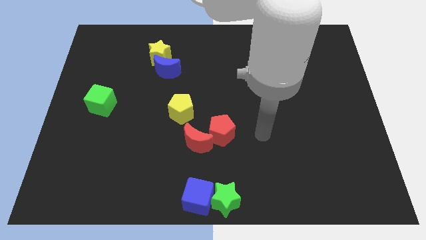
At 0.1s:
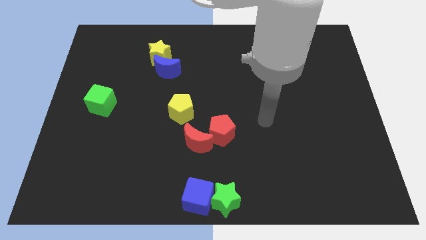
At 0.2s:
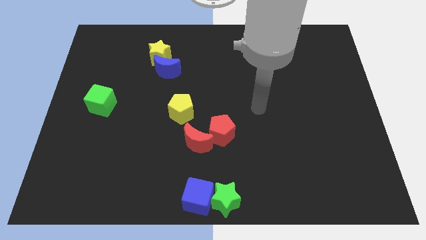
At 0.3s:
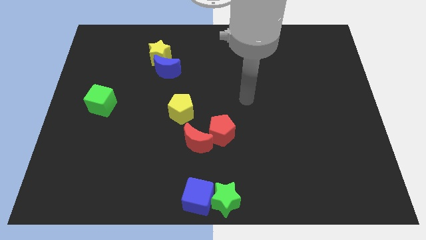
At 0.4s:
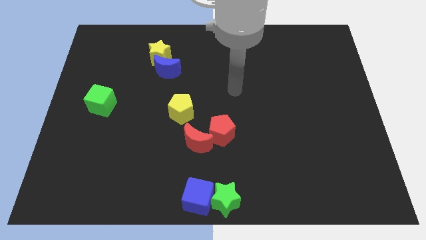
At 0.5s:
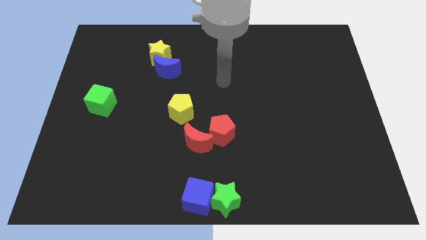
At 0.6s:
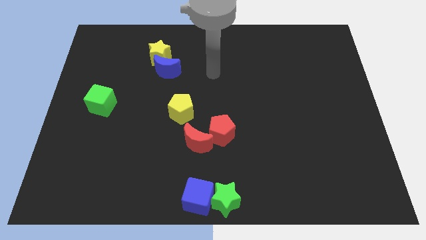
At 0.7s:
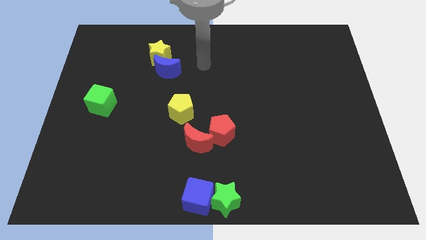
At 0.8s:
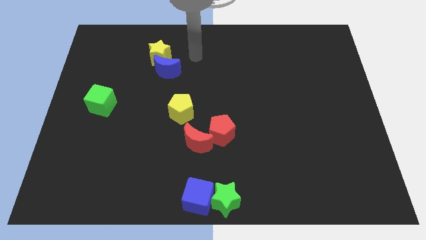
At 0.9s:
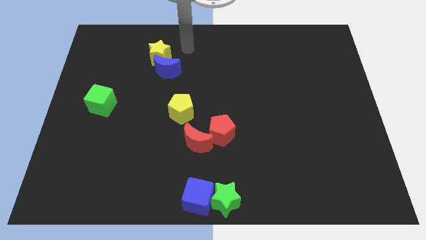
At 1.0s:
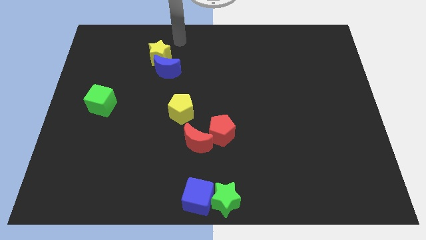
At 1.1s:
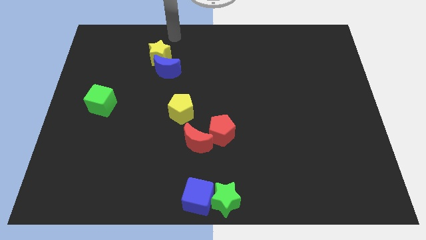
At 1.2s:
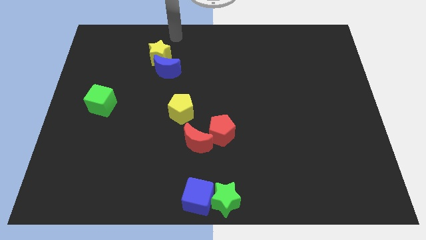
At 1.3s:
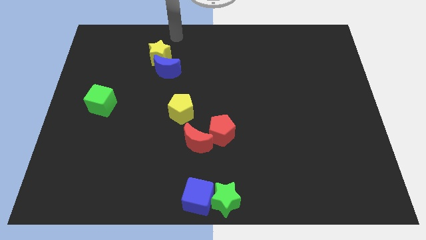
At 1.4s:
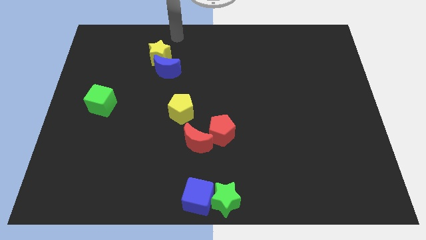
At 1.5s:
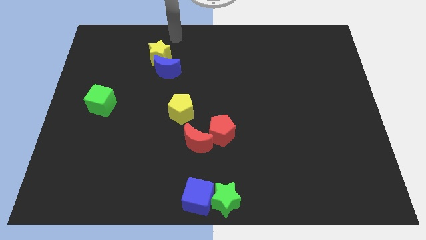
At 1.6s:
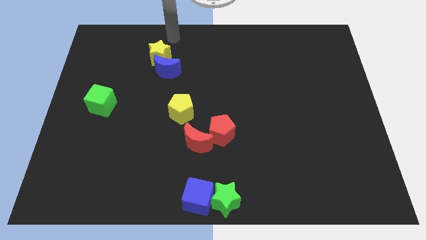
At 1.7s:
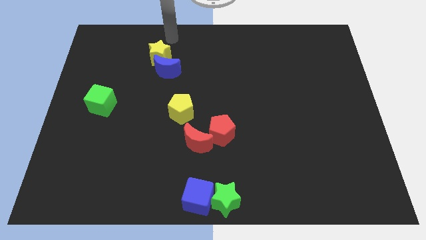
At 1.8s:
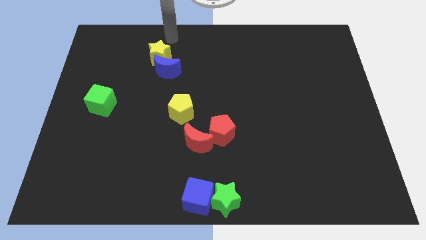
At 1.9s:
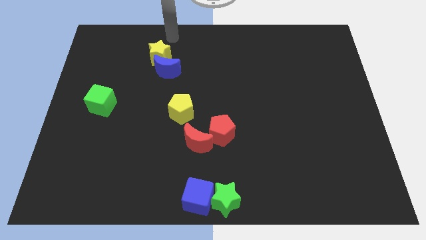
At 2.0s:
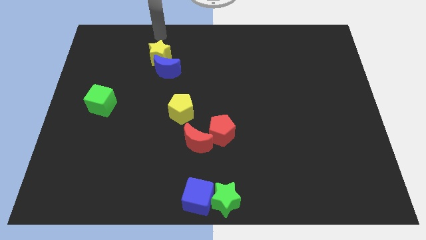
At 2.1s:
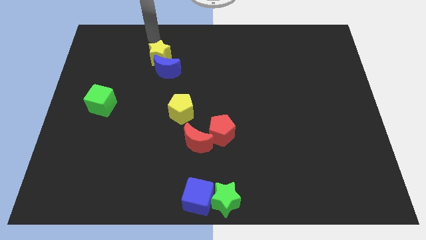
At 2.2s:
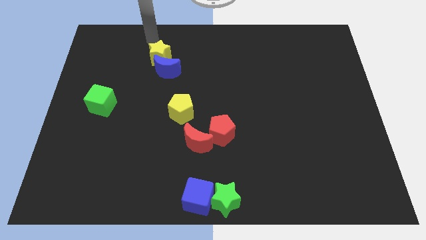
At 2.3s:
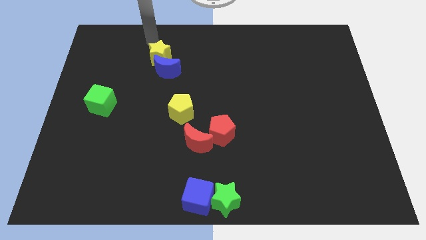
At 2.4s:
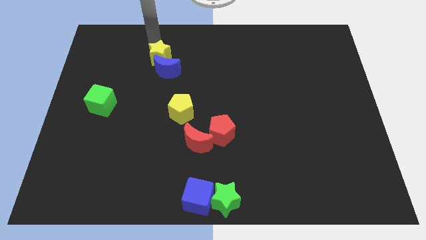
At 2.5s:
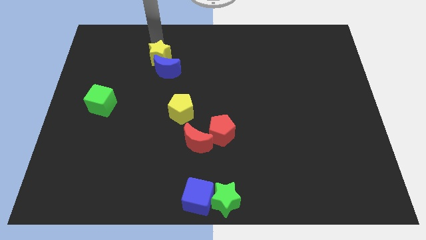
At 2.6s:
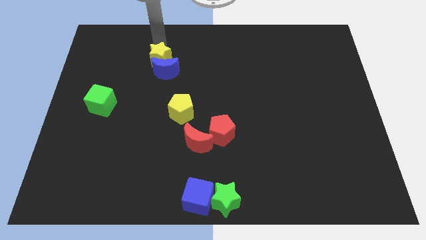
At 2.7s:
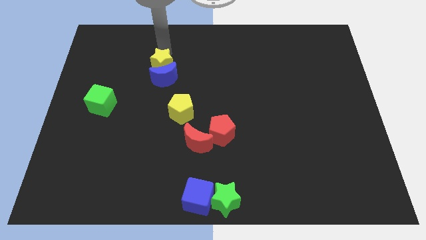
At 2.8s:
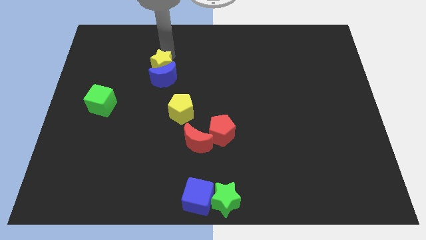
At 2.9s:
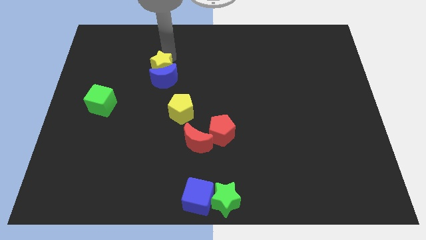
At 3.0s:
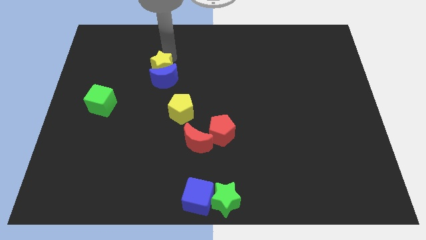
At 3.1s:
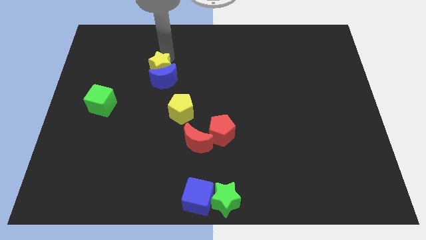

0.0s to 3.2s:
move the yellow star towards the blue crescent

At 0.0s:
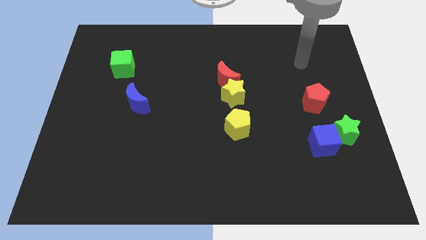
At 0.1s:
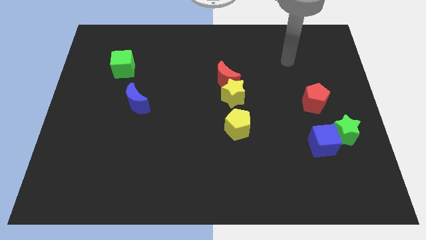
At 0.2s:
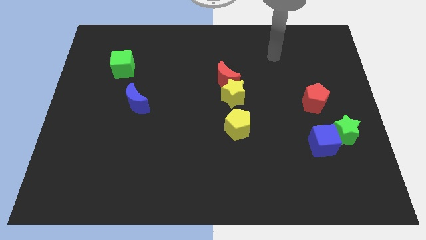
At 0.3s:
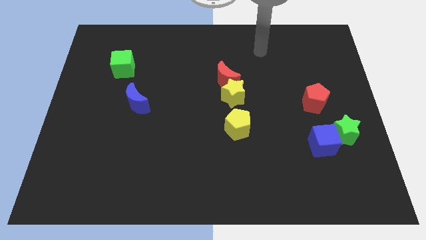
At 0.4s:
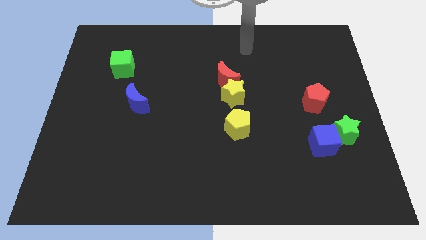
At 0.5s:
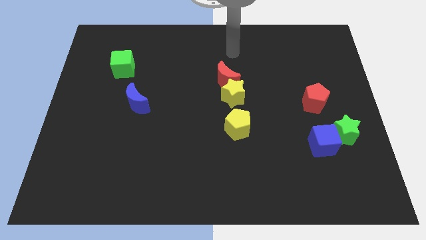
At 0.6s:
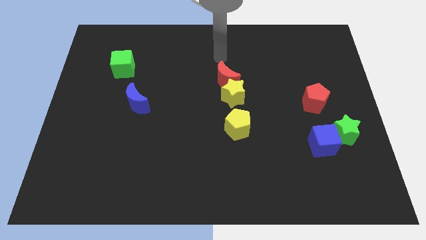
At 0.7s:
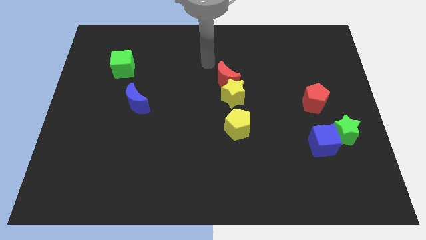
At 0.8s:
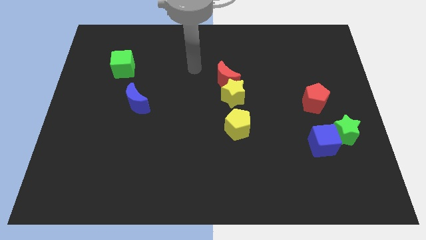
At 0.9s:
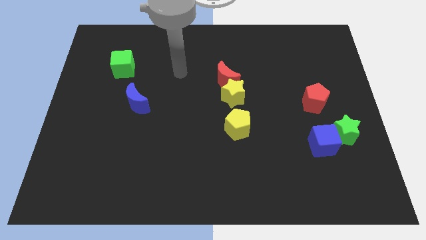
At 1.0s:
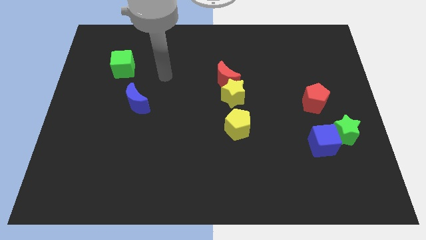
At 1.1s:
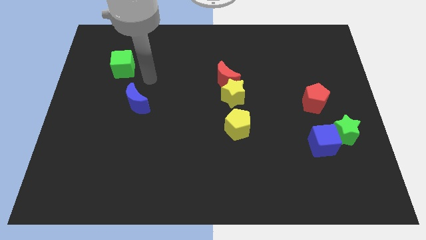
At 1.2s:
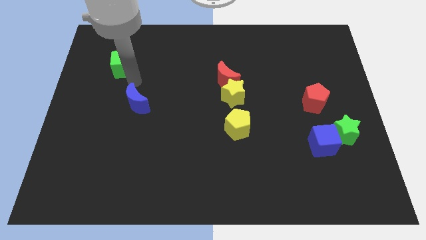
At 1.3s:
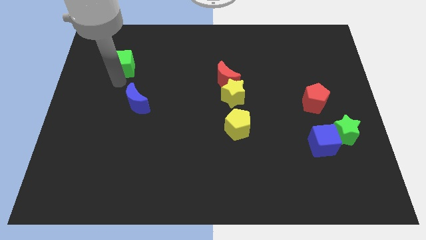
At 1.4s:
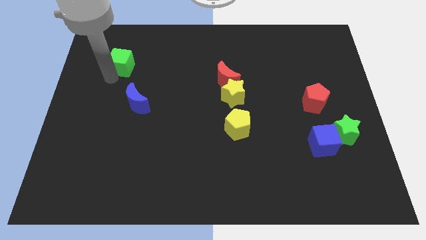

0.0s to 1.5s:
tap the green cube

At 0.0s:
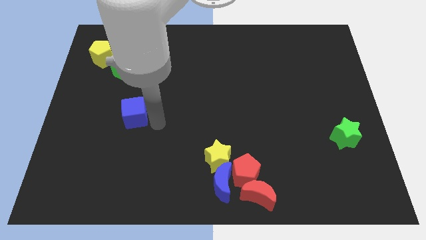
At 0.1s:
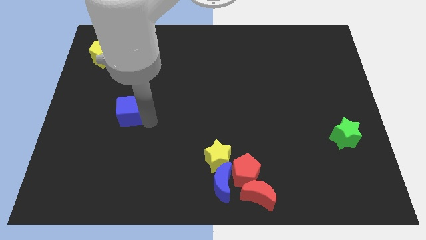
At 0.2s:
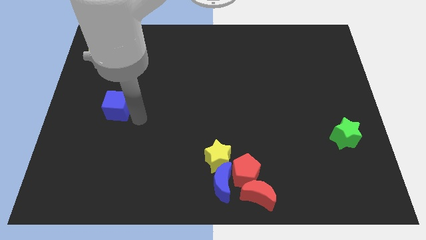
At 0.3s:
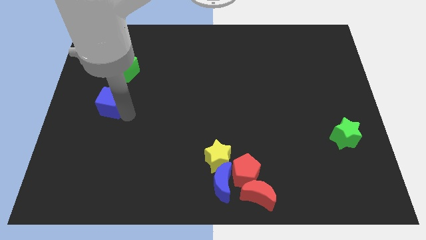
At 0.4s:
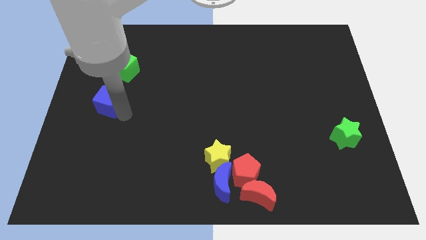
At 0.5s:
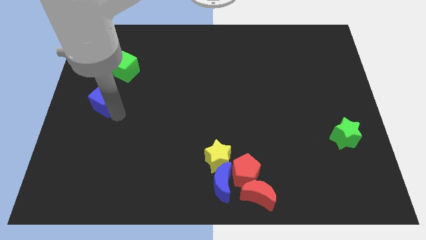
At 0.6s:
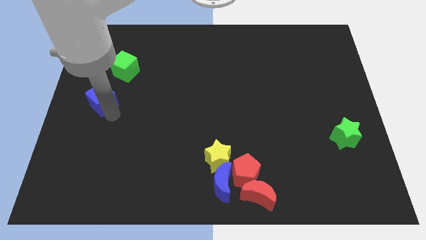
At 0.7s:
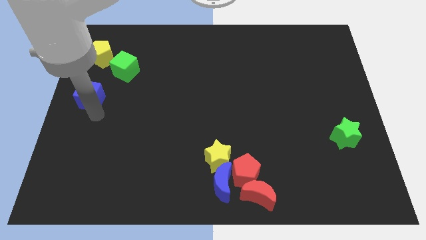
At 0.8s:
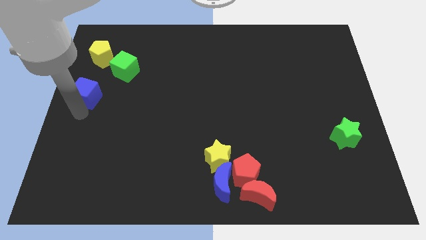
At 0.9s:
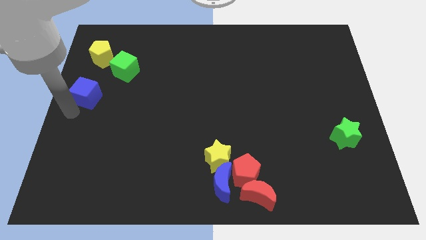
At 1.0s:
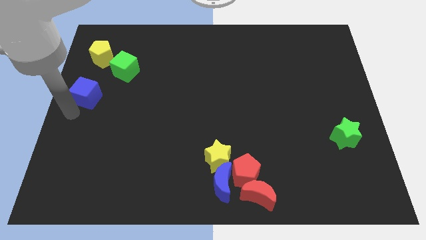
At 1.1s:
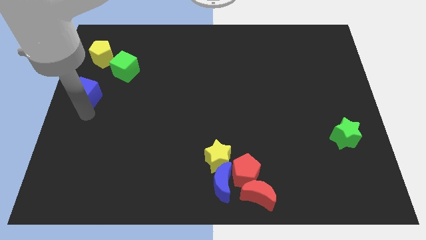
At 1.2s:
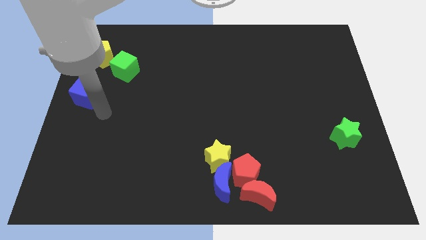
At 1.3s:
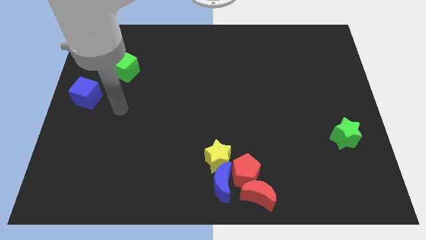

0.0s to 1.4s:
move the blue cube to the bottom of the yellow pentagon

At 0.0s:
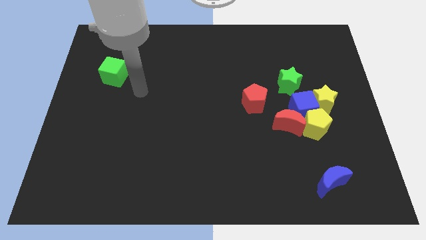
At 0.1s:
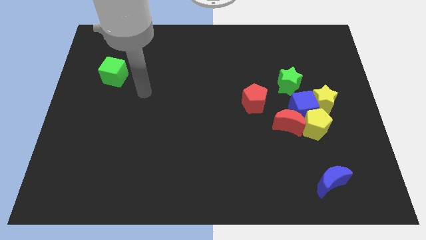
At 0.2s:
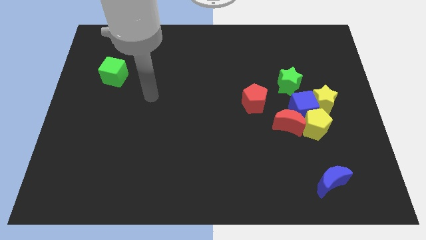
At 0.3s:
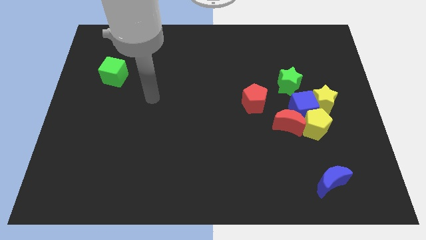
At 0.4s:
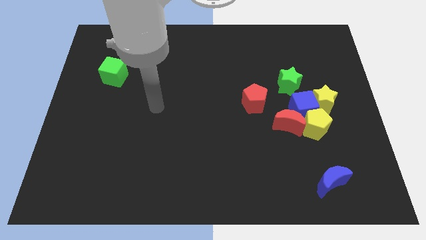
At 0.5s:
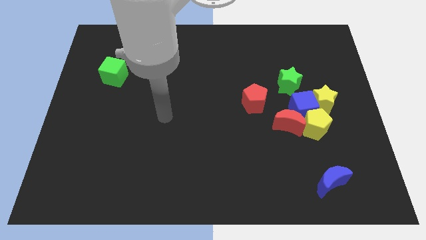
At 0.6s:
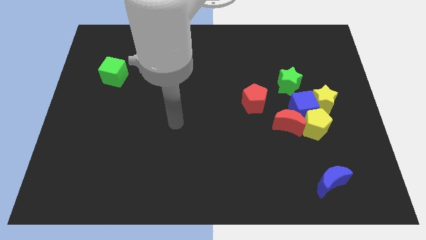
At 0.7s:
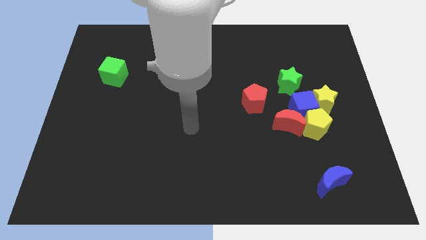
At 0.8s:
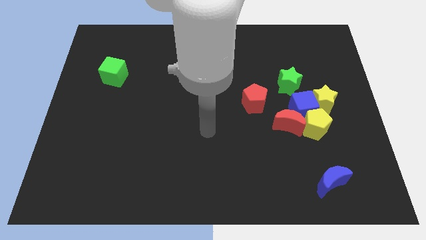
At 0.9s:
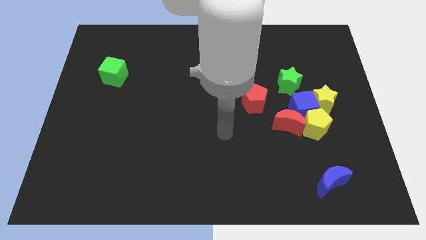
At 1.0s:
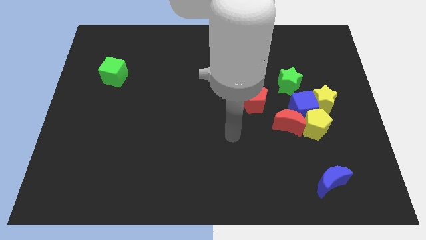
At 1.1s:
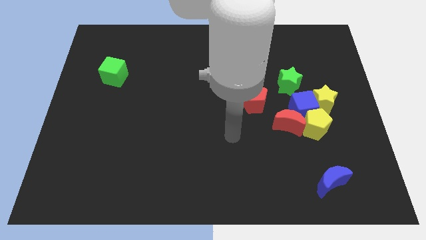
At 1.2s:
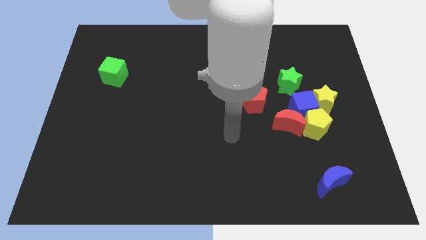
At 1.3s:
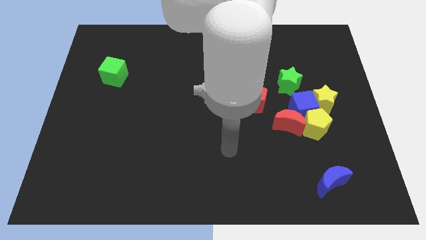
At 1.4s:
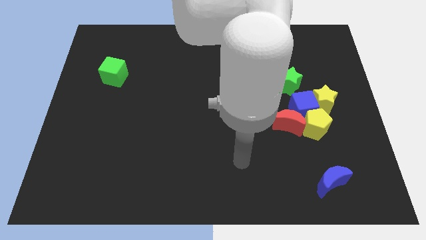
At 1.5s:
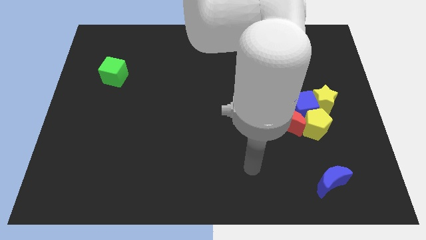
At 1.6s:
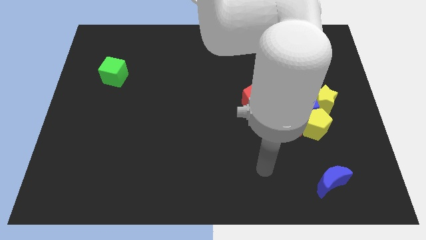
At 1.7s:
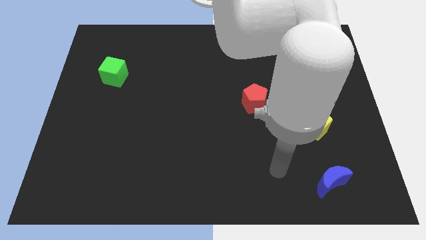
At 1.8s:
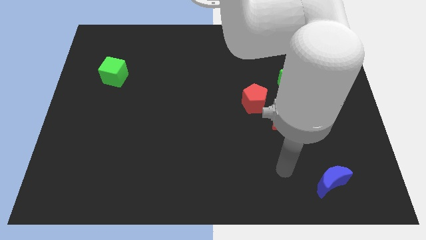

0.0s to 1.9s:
move your arm towards the blue crescent

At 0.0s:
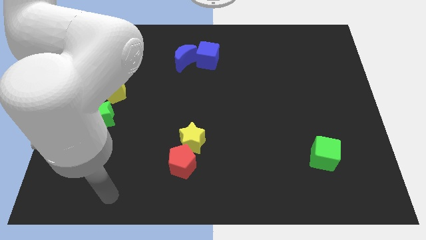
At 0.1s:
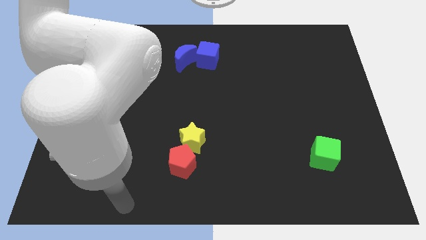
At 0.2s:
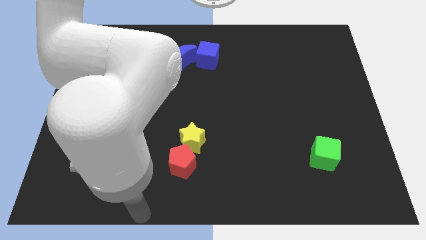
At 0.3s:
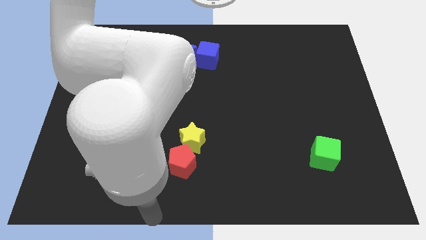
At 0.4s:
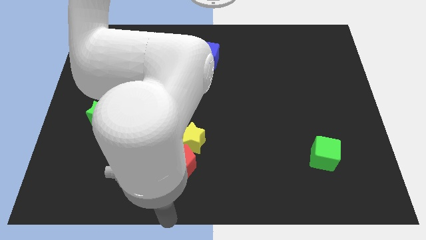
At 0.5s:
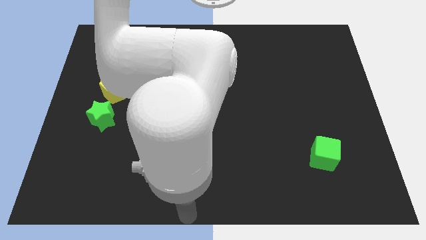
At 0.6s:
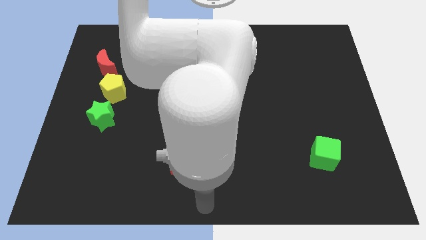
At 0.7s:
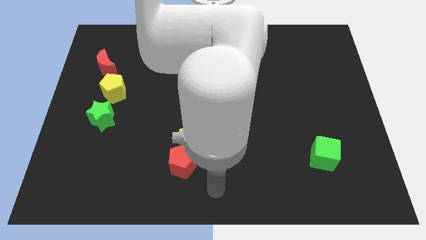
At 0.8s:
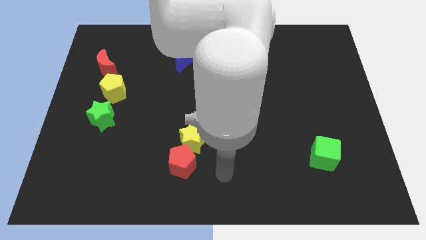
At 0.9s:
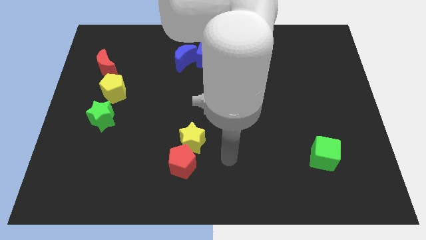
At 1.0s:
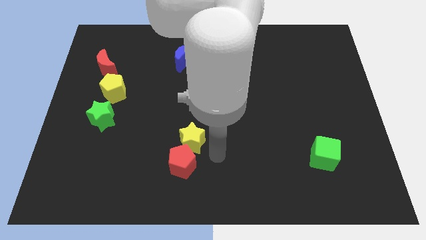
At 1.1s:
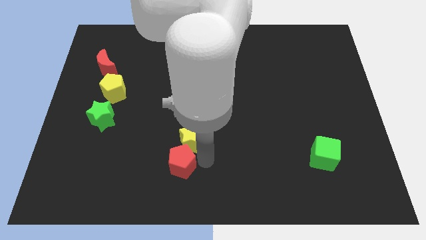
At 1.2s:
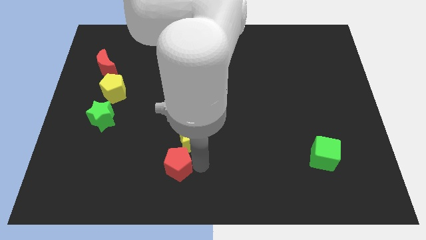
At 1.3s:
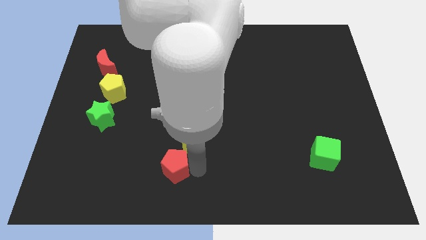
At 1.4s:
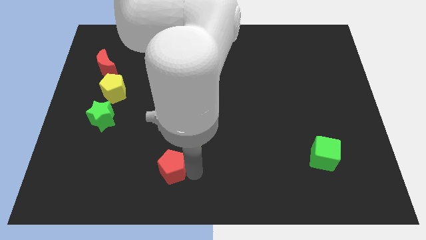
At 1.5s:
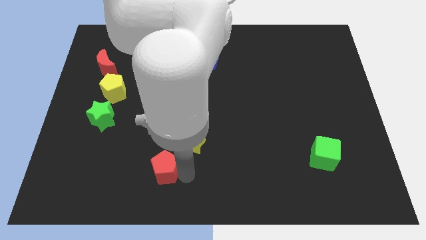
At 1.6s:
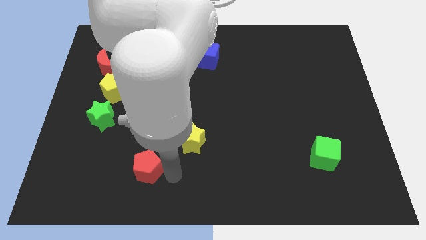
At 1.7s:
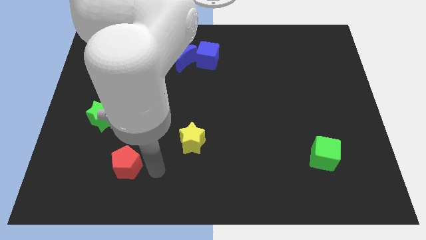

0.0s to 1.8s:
separate the red pentagon from the yellow star
